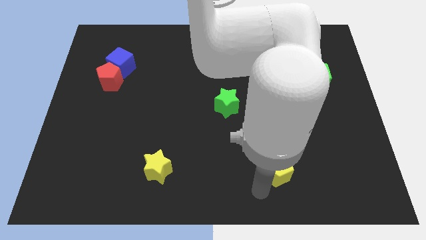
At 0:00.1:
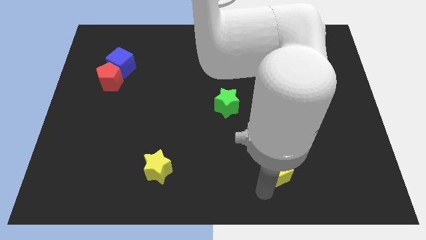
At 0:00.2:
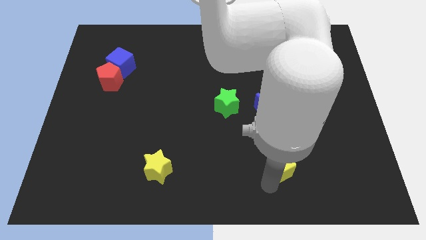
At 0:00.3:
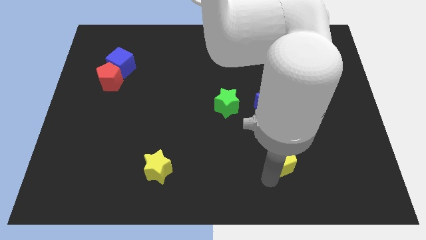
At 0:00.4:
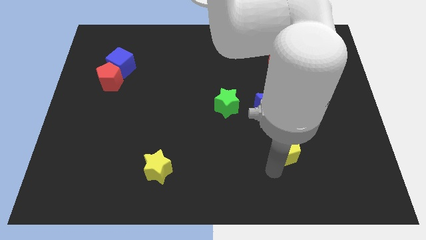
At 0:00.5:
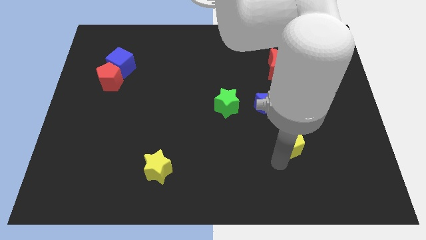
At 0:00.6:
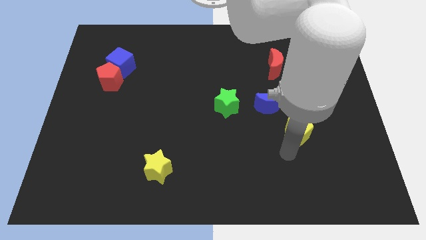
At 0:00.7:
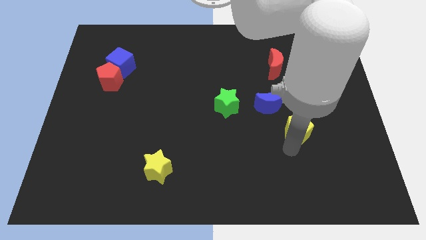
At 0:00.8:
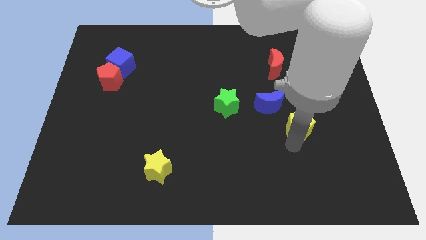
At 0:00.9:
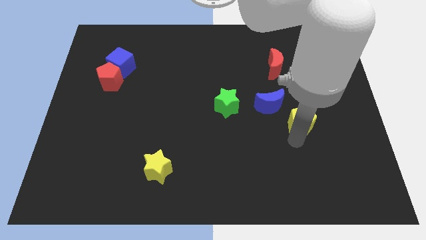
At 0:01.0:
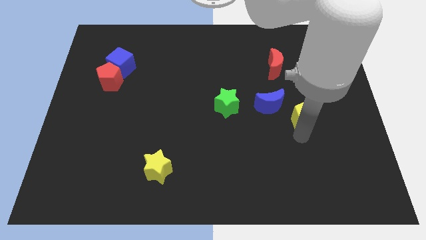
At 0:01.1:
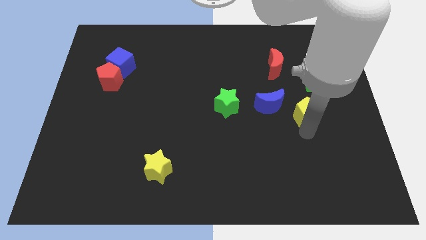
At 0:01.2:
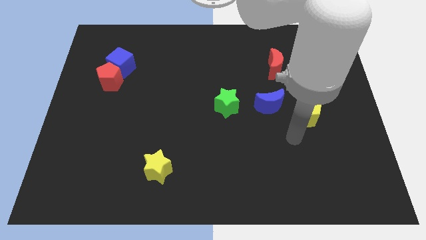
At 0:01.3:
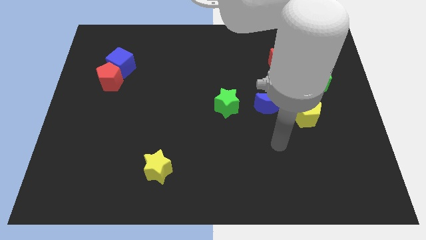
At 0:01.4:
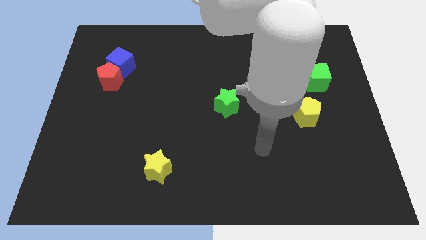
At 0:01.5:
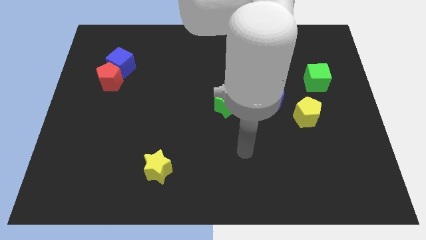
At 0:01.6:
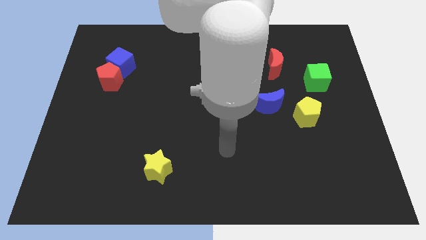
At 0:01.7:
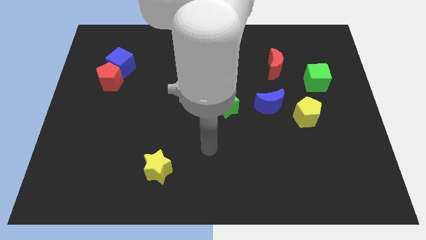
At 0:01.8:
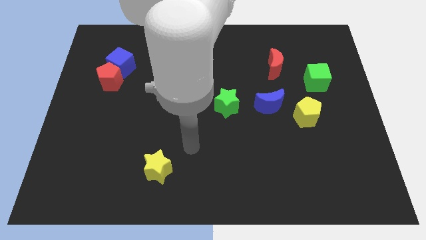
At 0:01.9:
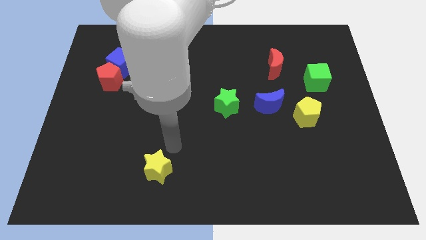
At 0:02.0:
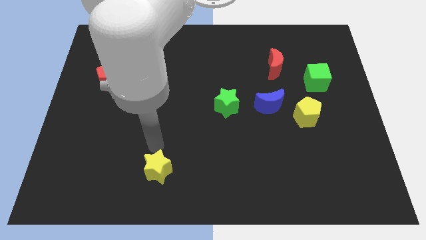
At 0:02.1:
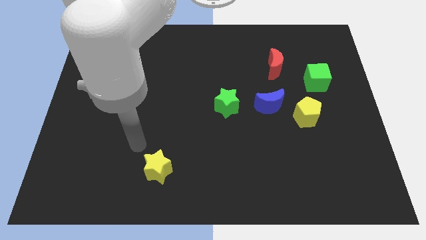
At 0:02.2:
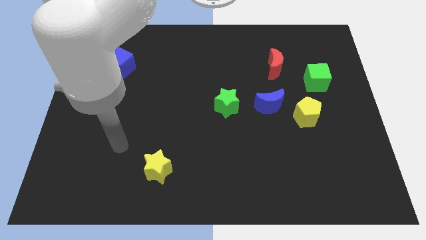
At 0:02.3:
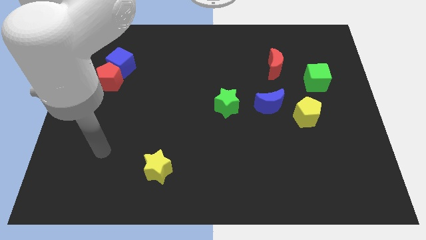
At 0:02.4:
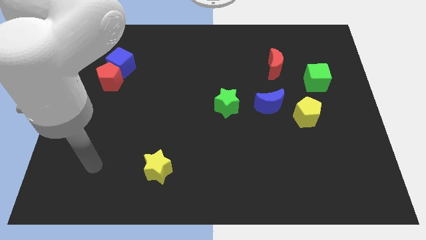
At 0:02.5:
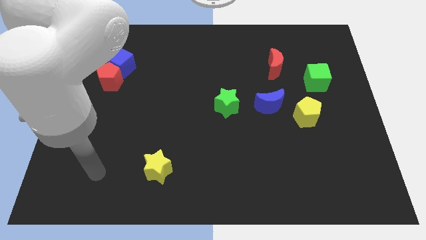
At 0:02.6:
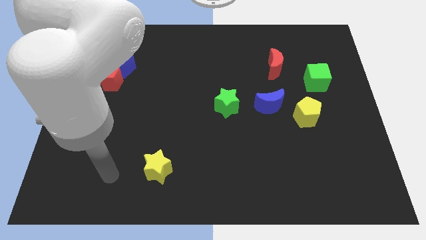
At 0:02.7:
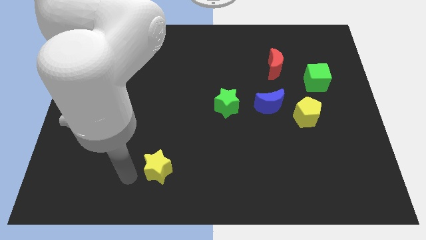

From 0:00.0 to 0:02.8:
place your arm towards left side of yellow star

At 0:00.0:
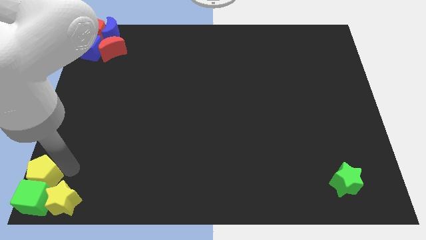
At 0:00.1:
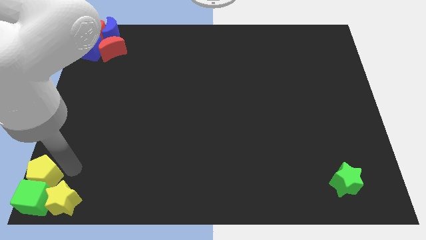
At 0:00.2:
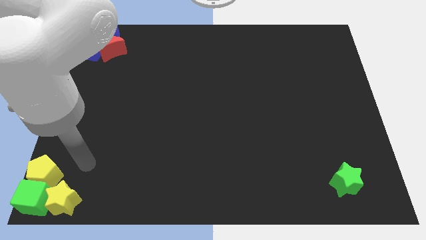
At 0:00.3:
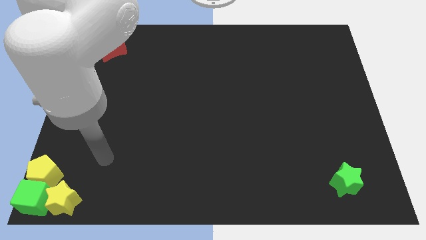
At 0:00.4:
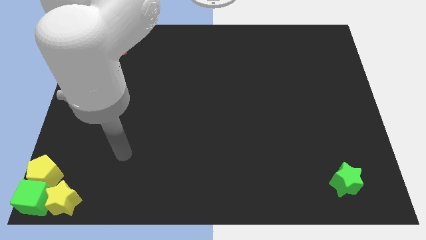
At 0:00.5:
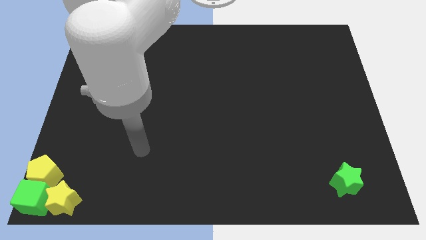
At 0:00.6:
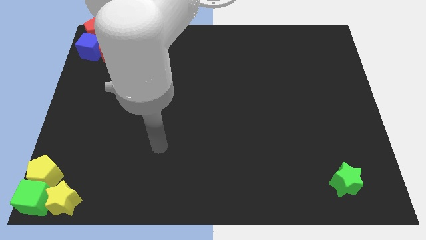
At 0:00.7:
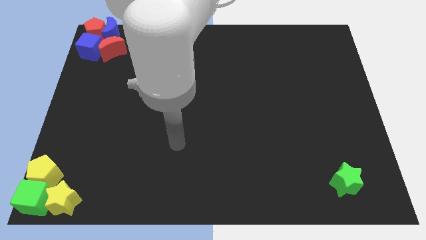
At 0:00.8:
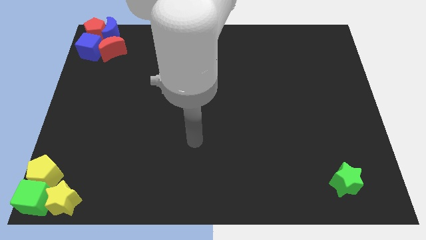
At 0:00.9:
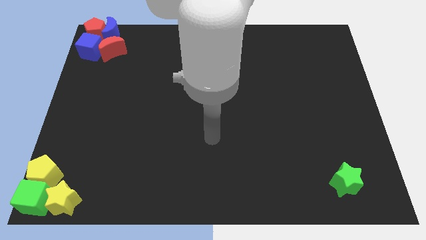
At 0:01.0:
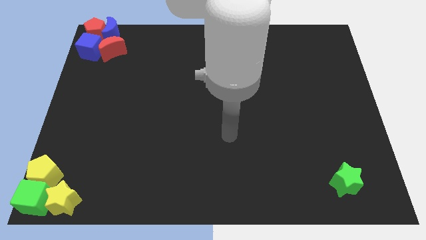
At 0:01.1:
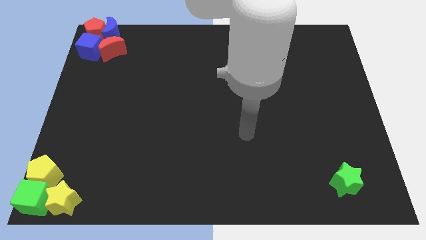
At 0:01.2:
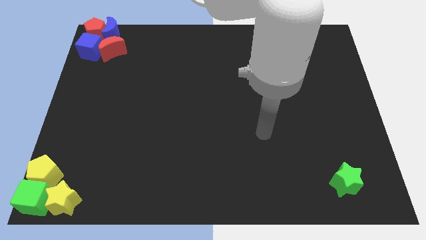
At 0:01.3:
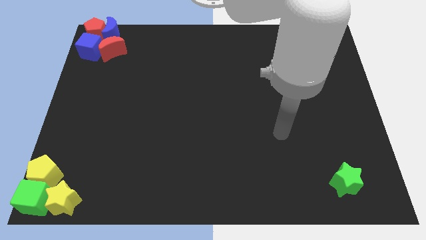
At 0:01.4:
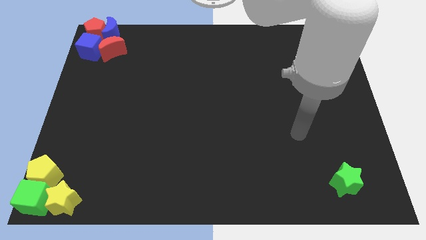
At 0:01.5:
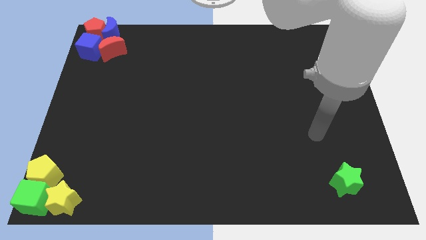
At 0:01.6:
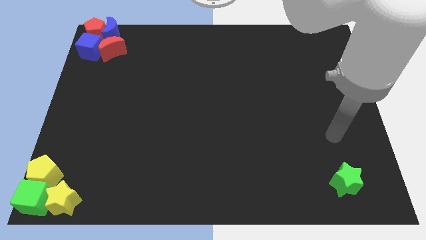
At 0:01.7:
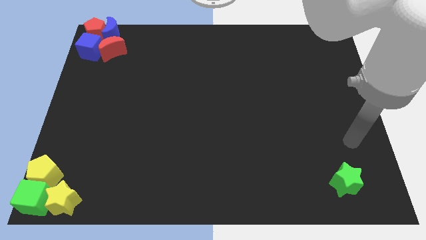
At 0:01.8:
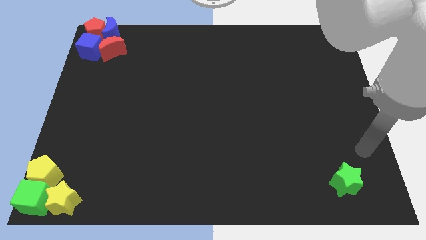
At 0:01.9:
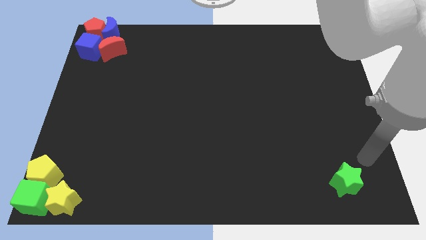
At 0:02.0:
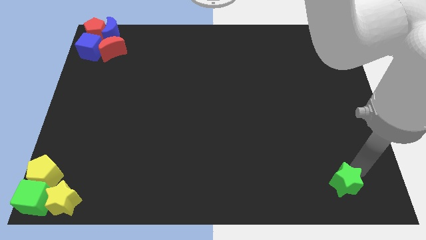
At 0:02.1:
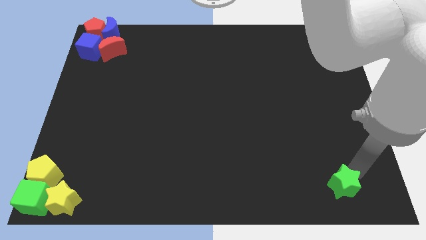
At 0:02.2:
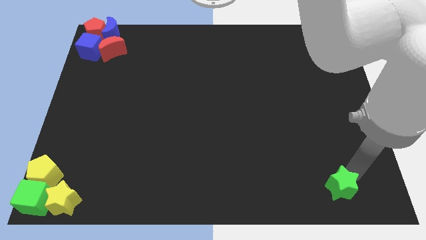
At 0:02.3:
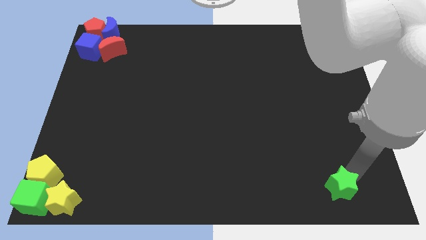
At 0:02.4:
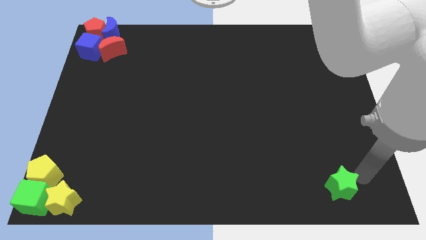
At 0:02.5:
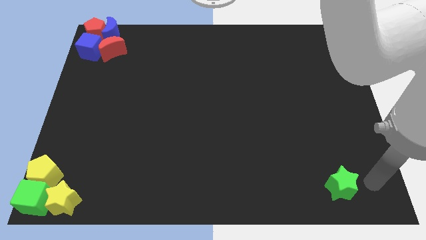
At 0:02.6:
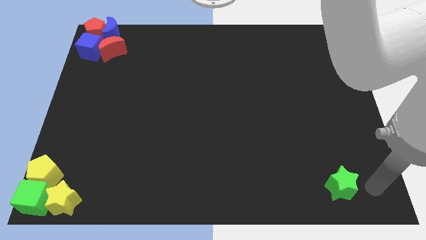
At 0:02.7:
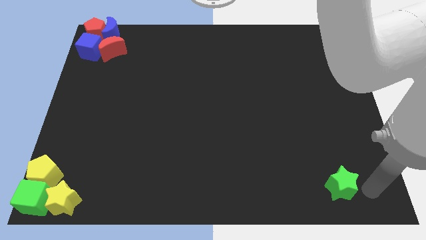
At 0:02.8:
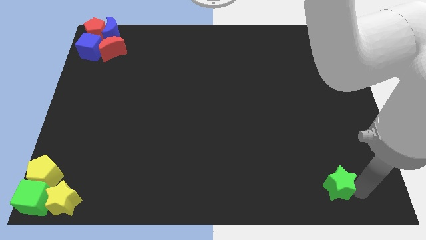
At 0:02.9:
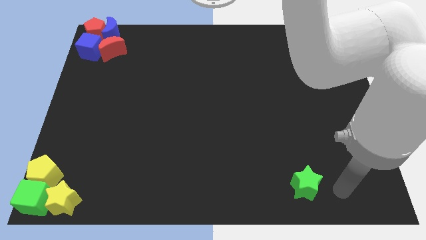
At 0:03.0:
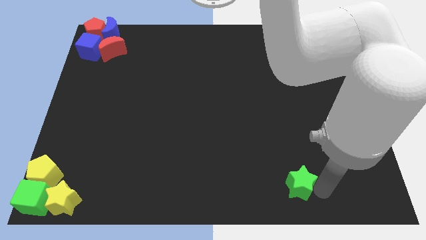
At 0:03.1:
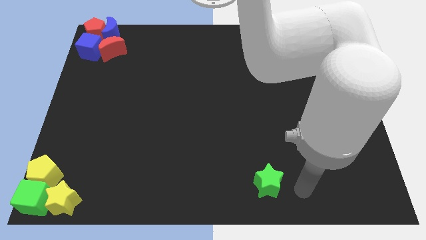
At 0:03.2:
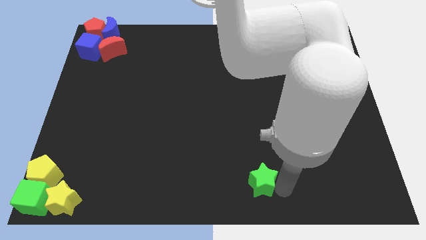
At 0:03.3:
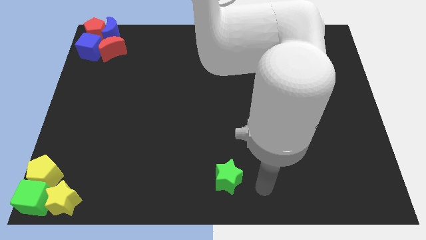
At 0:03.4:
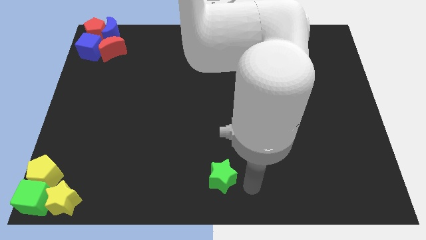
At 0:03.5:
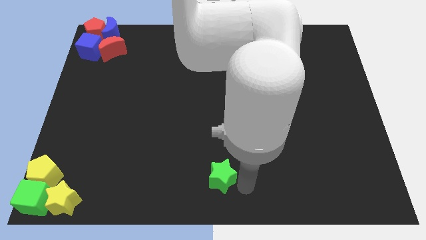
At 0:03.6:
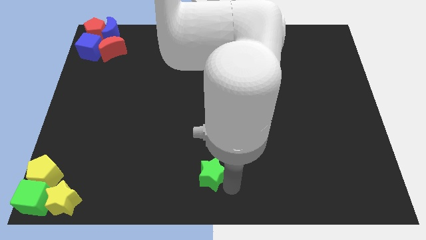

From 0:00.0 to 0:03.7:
slide the green star to the bottom center of the table

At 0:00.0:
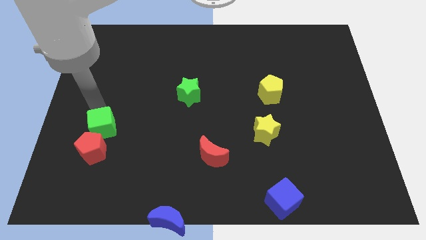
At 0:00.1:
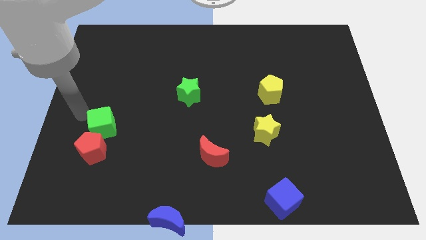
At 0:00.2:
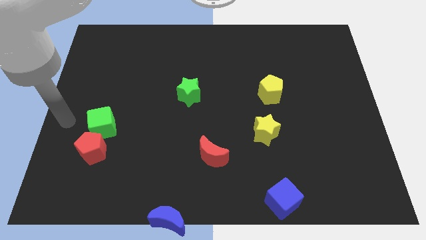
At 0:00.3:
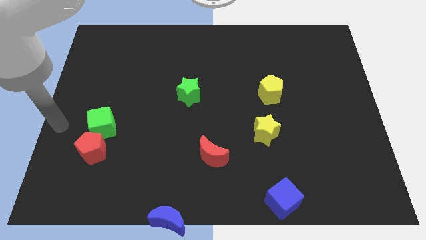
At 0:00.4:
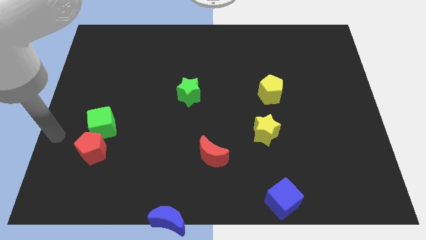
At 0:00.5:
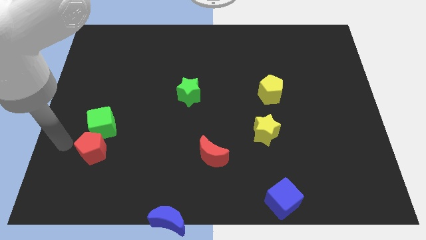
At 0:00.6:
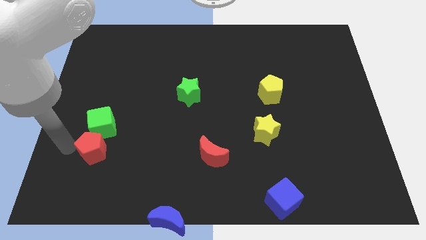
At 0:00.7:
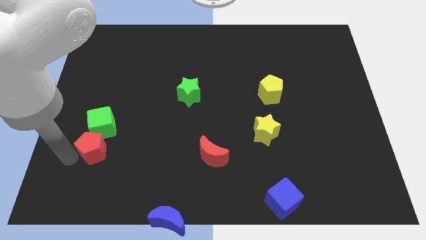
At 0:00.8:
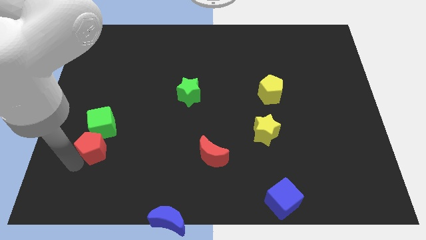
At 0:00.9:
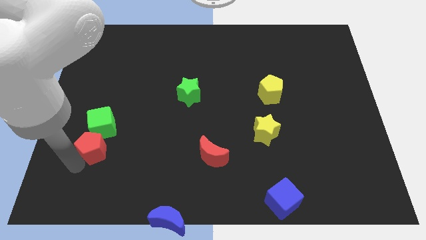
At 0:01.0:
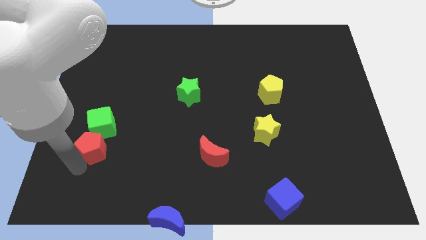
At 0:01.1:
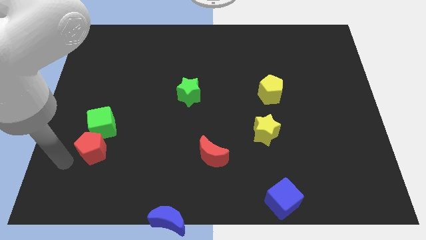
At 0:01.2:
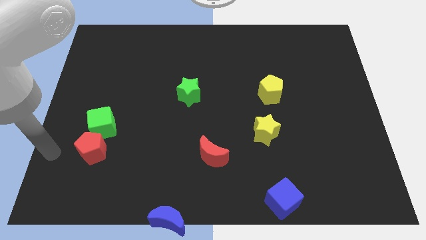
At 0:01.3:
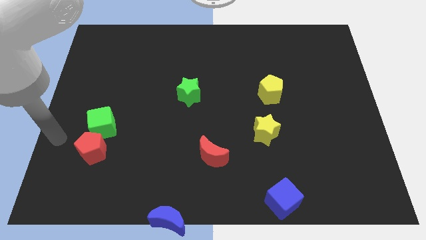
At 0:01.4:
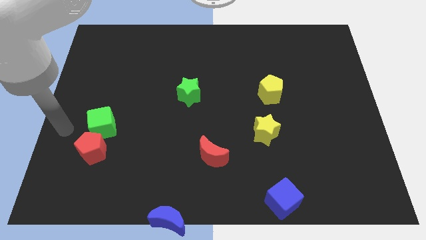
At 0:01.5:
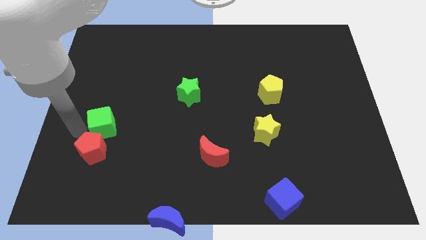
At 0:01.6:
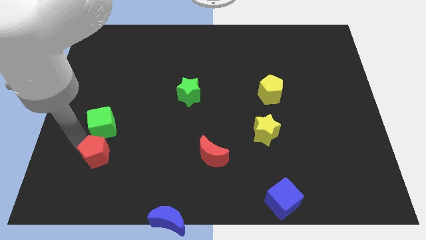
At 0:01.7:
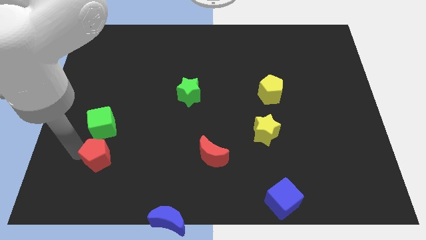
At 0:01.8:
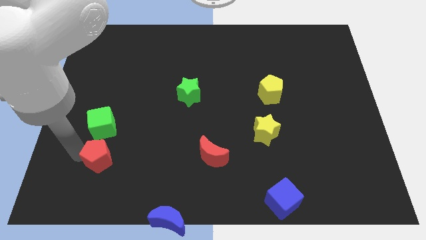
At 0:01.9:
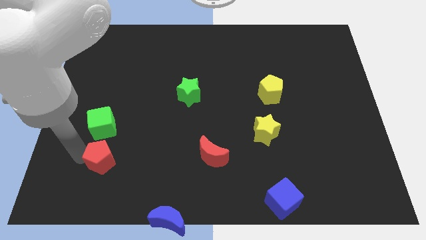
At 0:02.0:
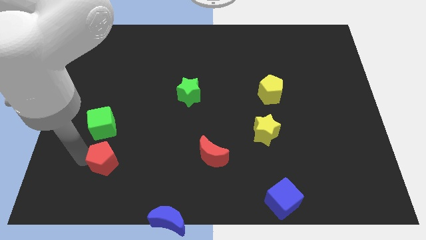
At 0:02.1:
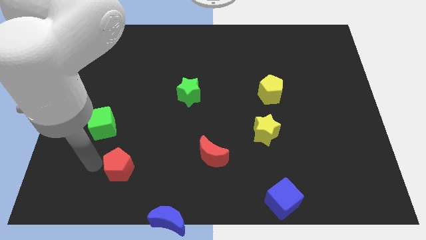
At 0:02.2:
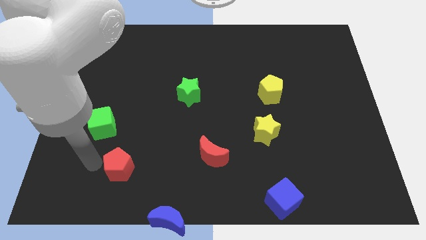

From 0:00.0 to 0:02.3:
place the red pentagon in between the green cube and blue moon
